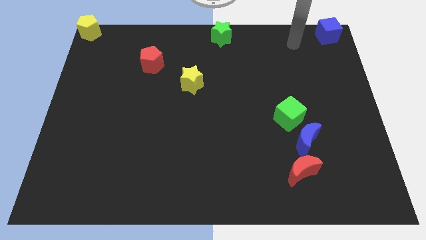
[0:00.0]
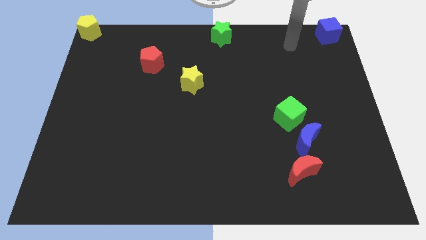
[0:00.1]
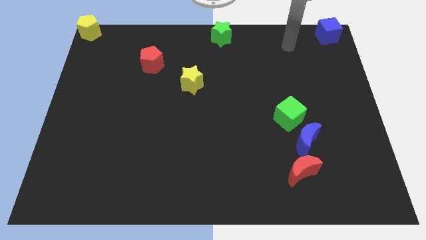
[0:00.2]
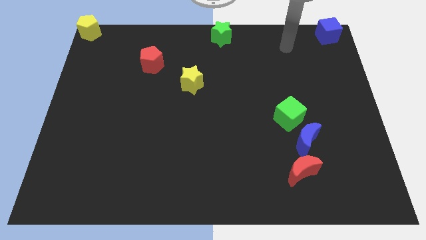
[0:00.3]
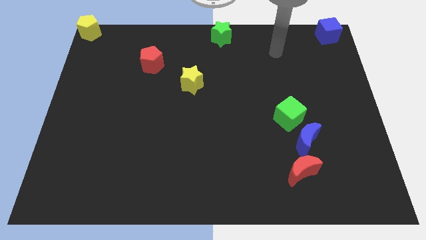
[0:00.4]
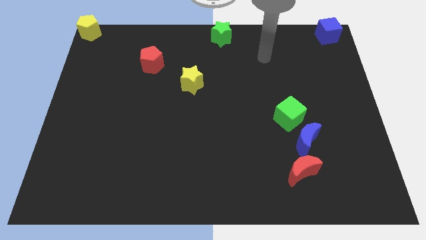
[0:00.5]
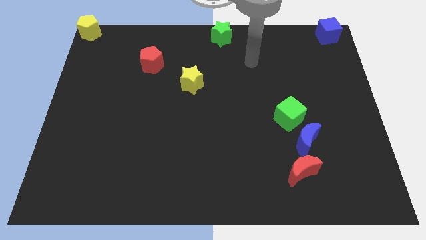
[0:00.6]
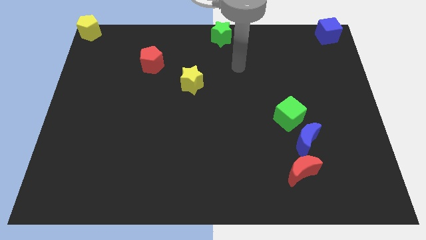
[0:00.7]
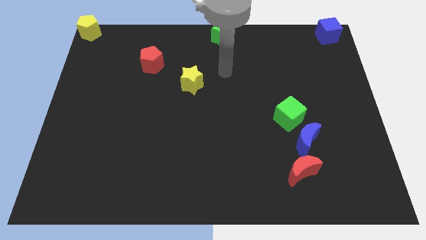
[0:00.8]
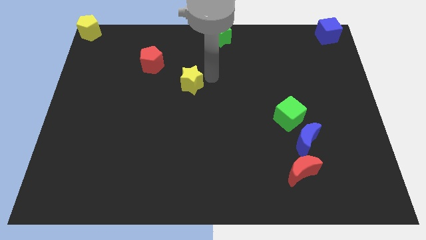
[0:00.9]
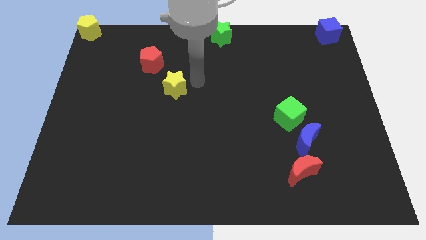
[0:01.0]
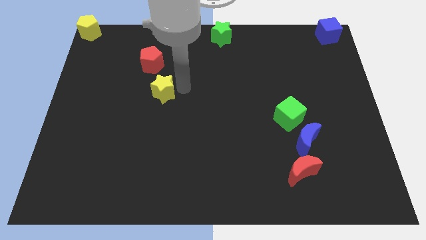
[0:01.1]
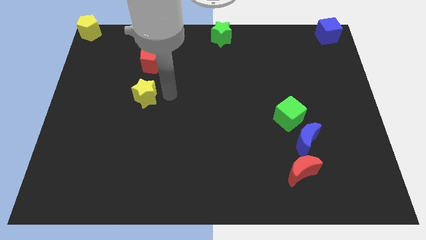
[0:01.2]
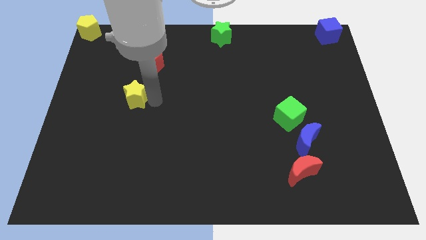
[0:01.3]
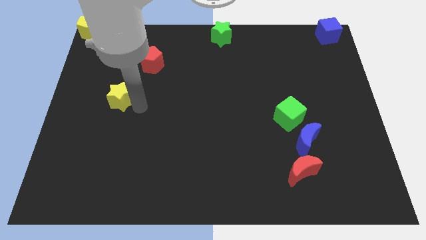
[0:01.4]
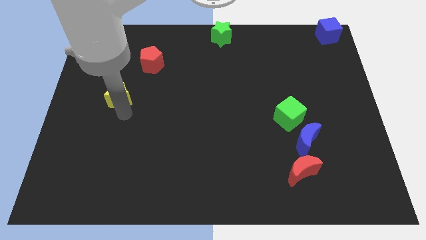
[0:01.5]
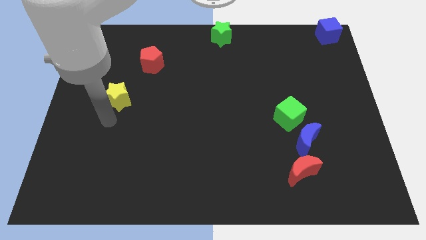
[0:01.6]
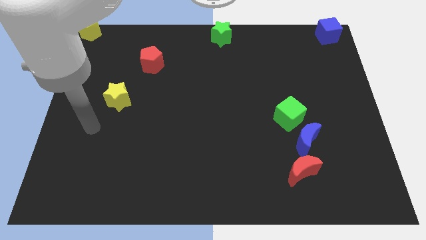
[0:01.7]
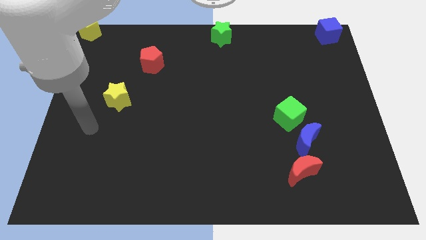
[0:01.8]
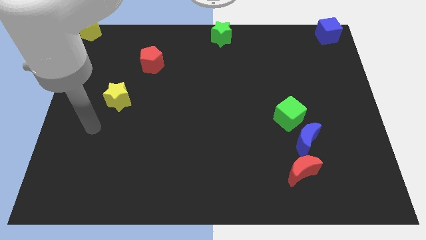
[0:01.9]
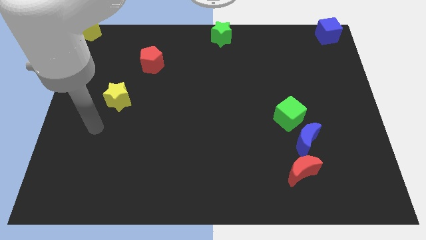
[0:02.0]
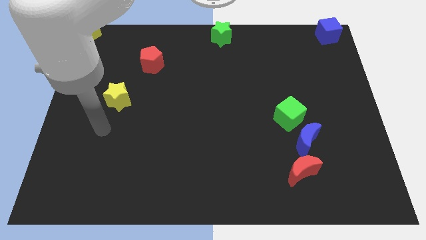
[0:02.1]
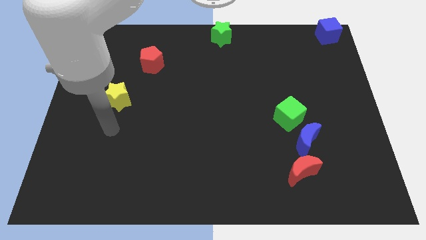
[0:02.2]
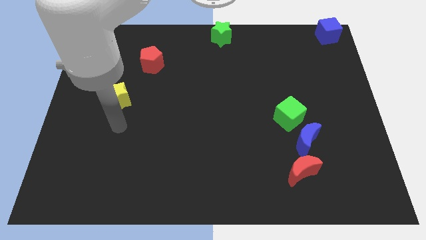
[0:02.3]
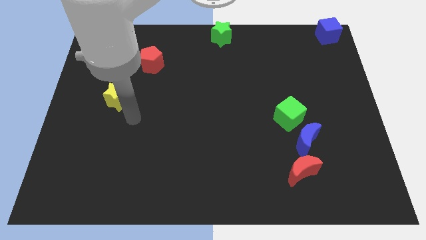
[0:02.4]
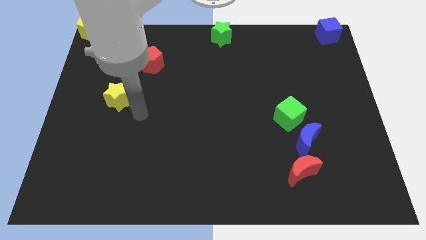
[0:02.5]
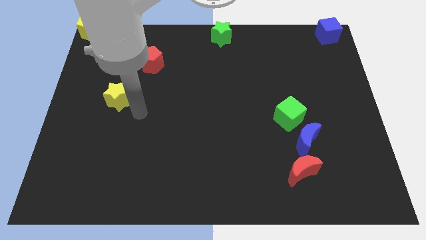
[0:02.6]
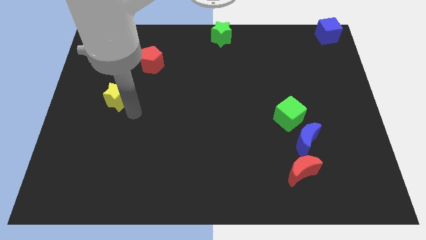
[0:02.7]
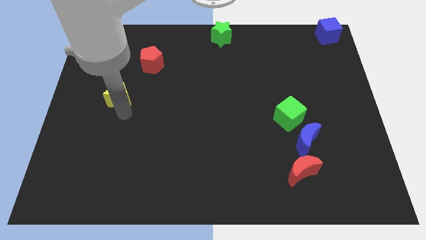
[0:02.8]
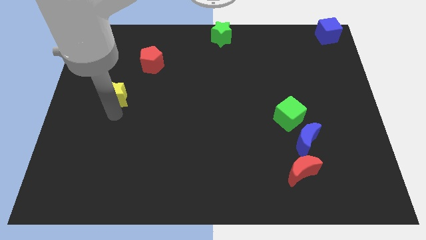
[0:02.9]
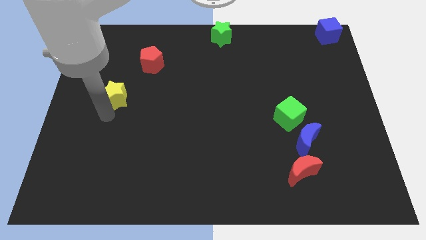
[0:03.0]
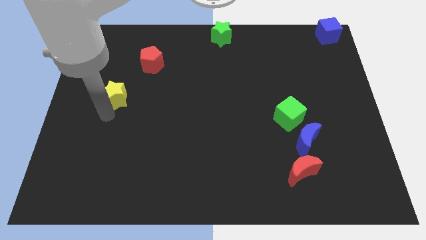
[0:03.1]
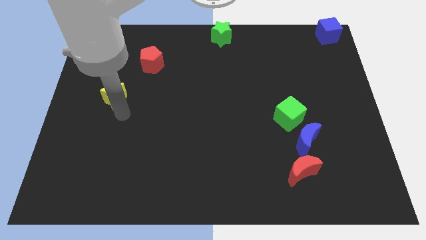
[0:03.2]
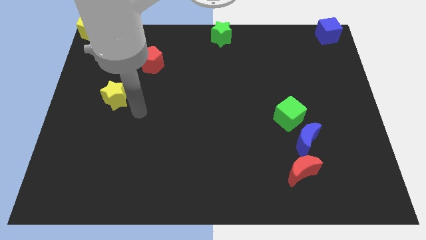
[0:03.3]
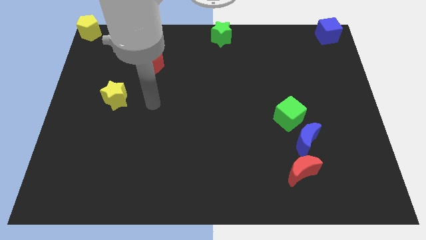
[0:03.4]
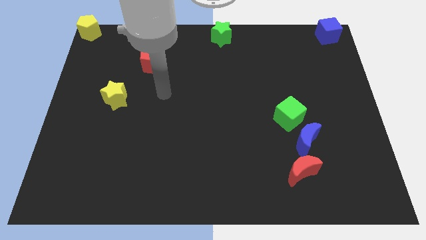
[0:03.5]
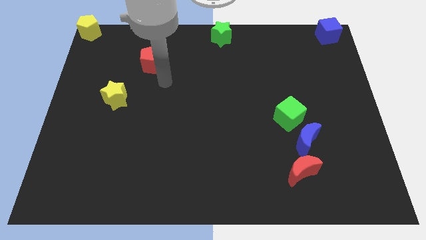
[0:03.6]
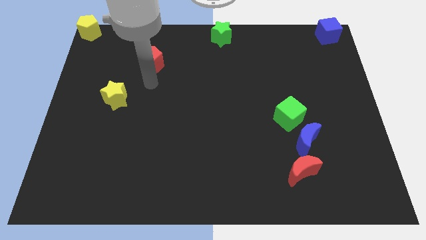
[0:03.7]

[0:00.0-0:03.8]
slide the yellow star to the center left

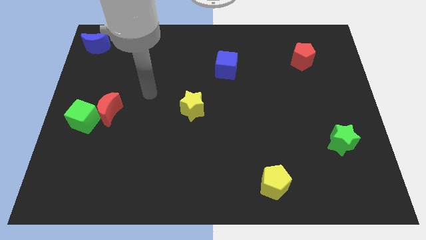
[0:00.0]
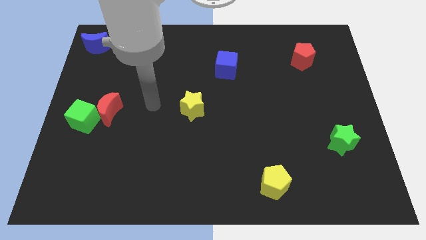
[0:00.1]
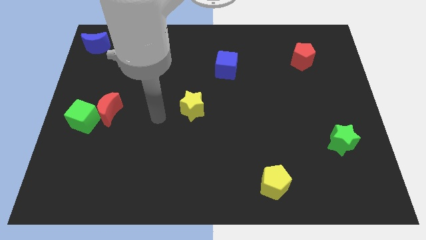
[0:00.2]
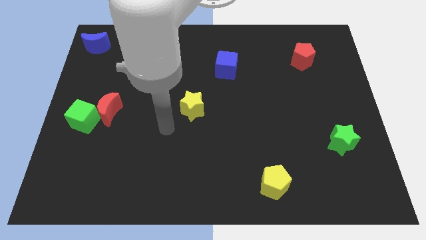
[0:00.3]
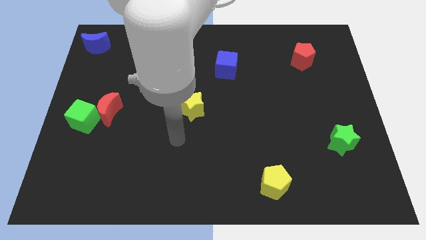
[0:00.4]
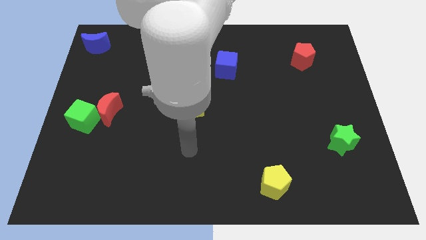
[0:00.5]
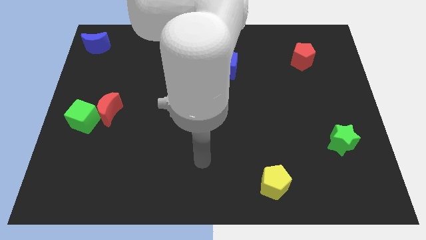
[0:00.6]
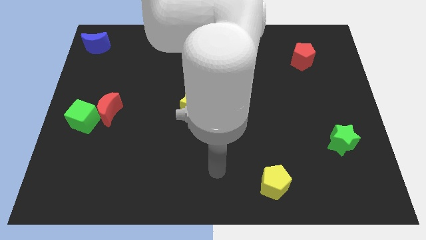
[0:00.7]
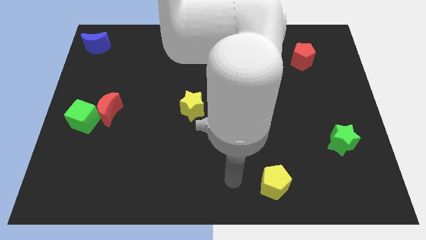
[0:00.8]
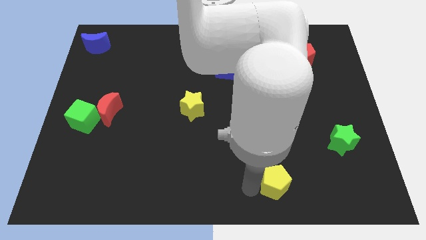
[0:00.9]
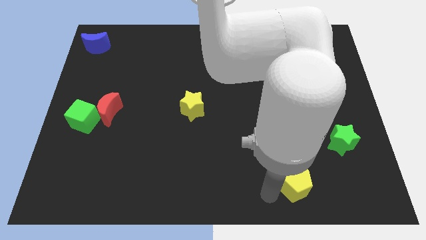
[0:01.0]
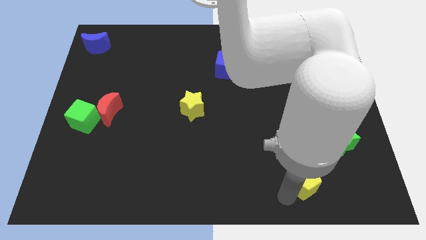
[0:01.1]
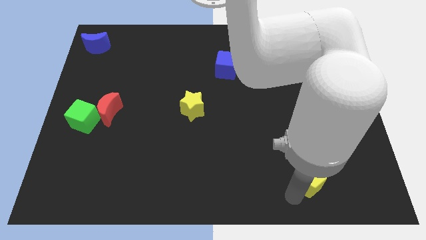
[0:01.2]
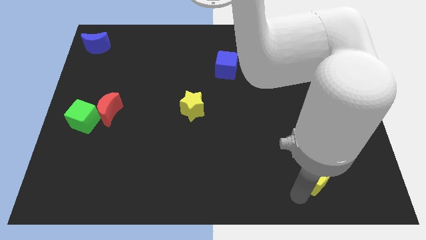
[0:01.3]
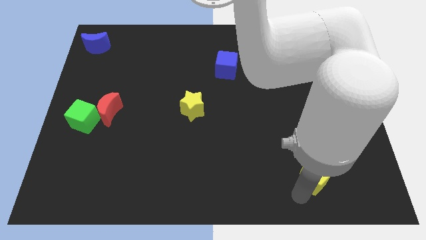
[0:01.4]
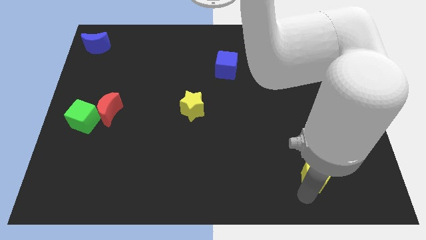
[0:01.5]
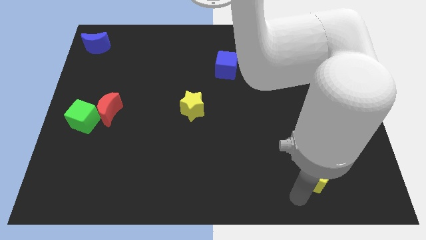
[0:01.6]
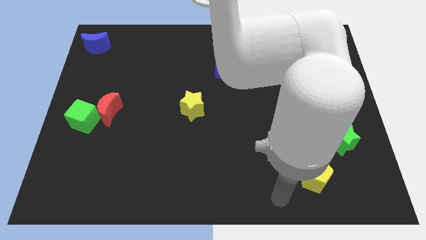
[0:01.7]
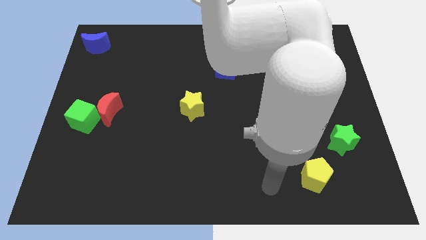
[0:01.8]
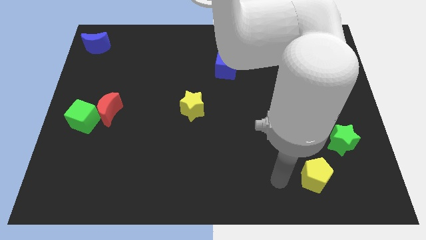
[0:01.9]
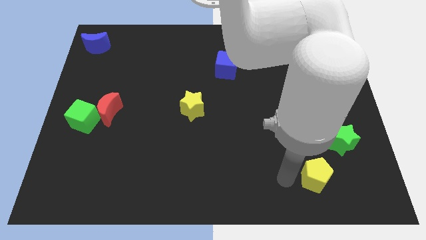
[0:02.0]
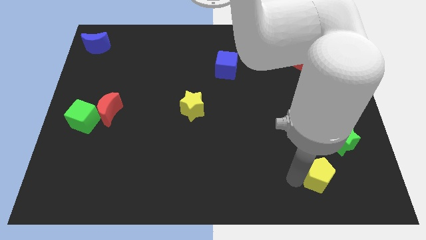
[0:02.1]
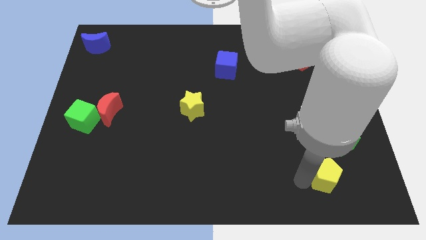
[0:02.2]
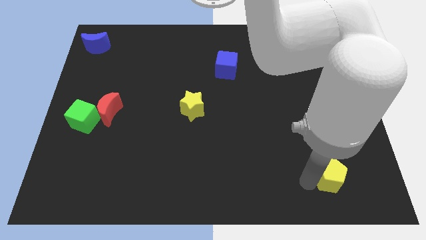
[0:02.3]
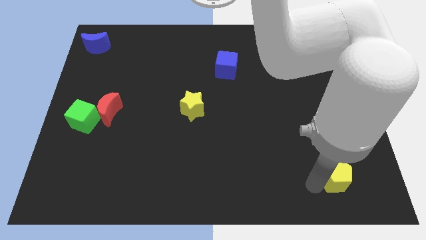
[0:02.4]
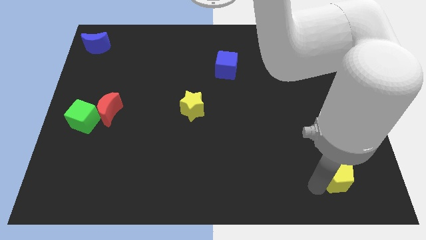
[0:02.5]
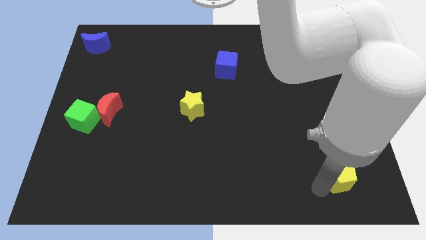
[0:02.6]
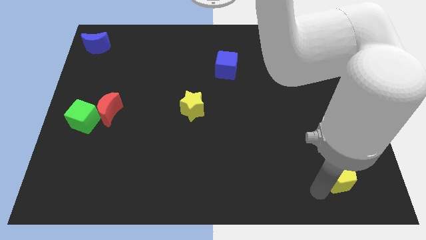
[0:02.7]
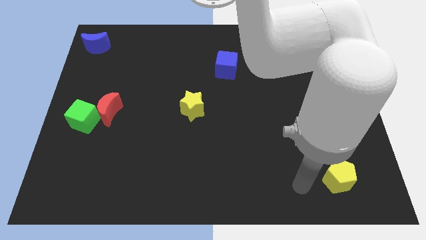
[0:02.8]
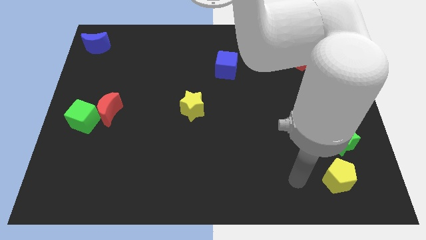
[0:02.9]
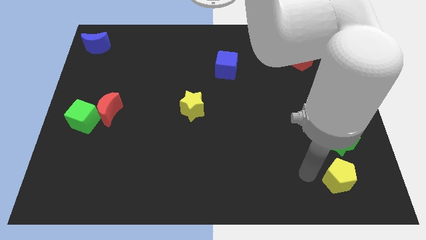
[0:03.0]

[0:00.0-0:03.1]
place yellow pentagon below green star

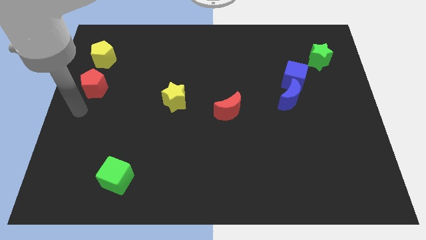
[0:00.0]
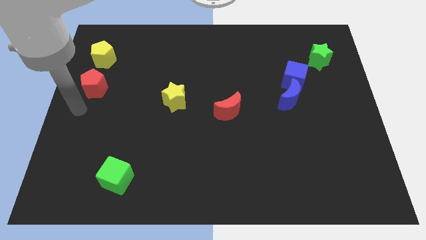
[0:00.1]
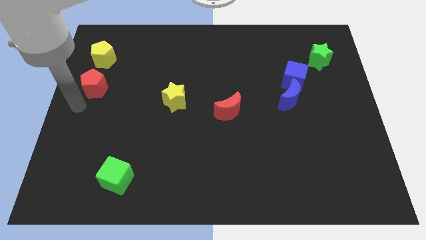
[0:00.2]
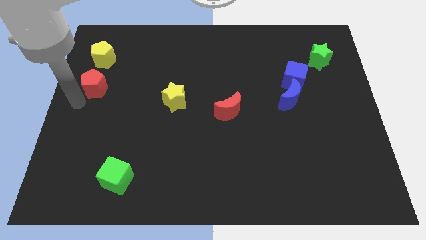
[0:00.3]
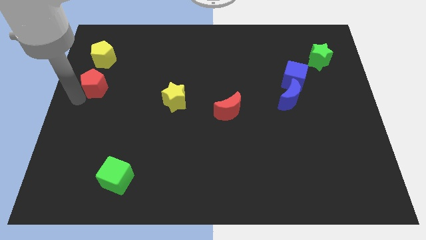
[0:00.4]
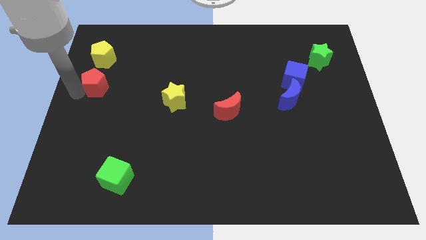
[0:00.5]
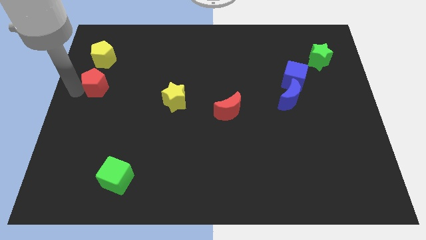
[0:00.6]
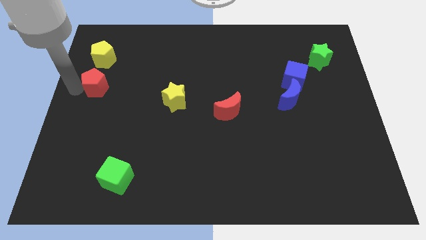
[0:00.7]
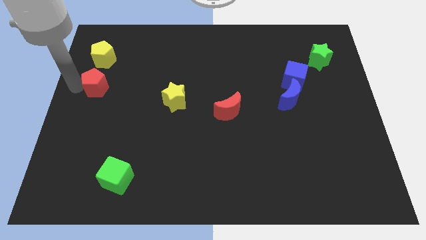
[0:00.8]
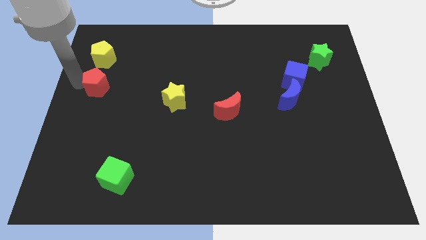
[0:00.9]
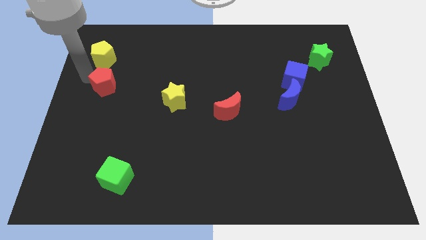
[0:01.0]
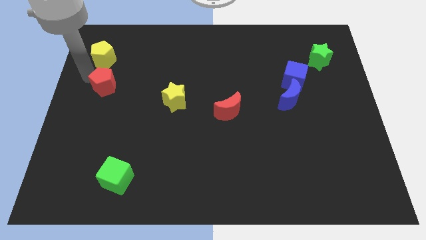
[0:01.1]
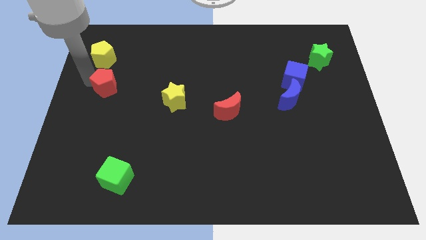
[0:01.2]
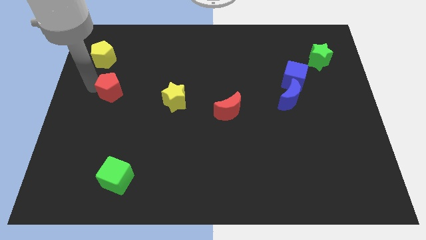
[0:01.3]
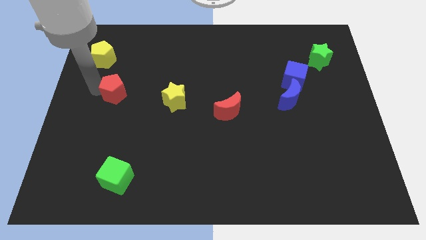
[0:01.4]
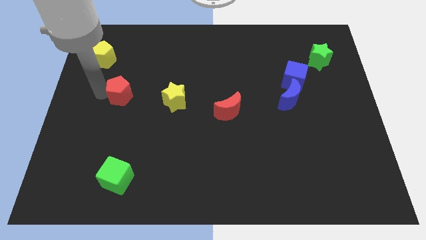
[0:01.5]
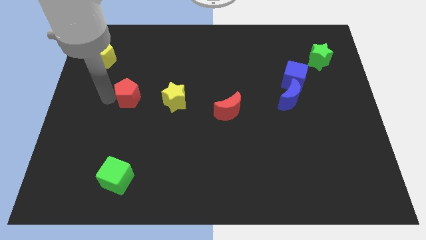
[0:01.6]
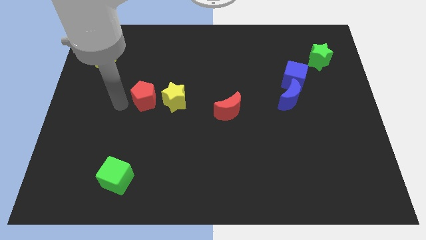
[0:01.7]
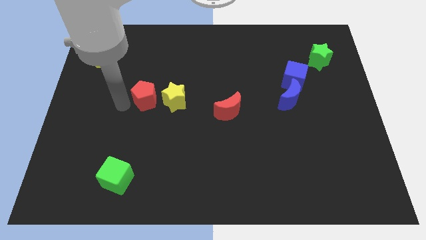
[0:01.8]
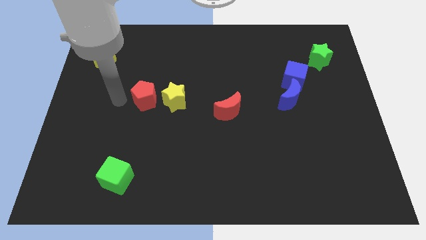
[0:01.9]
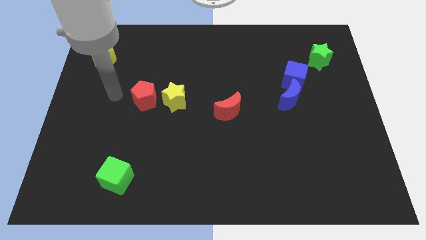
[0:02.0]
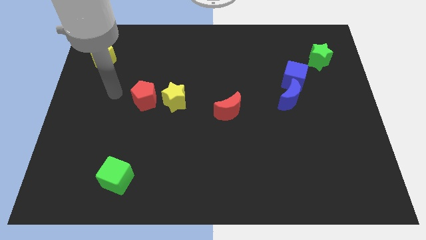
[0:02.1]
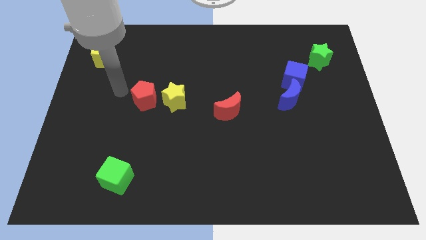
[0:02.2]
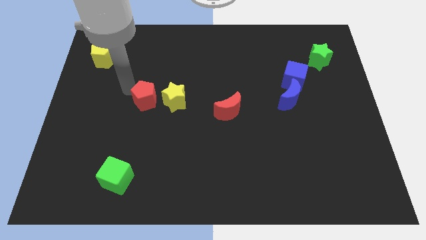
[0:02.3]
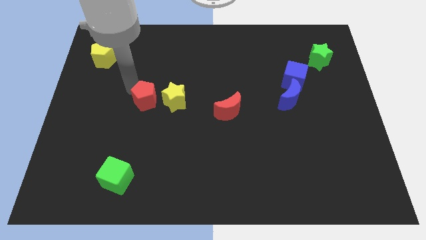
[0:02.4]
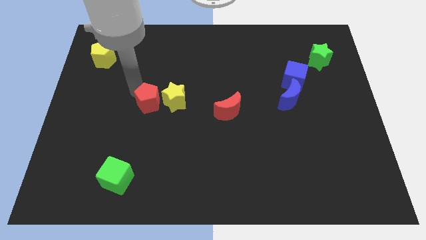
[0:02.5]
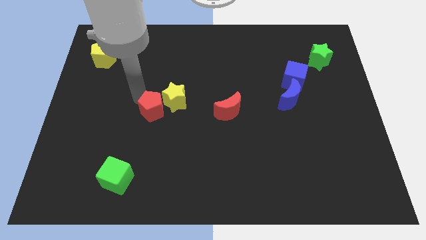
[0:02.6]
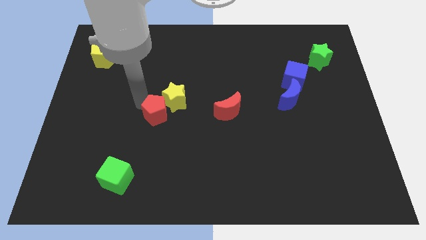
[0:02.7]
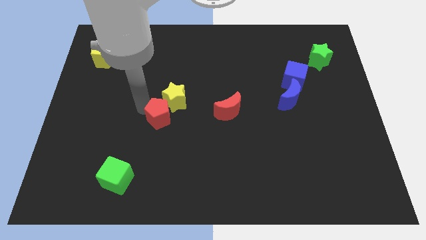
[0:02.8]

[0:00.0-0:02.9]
push the red pentagon into the yellow star
